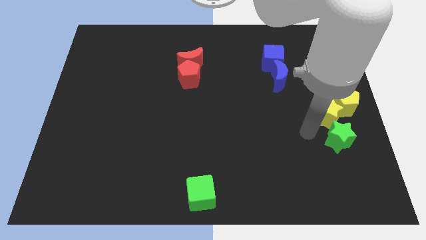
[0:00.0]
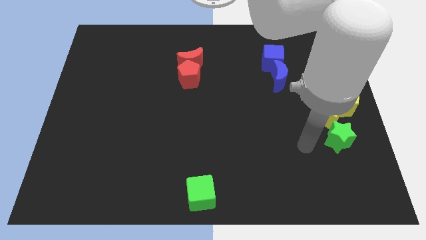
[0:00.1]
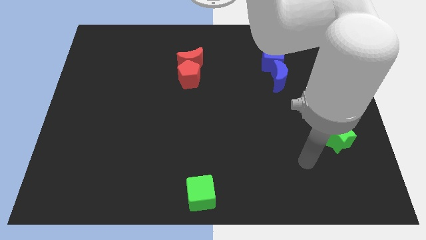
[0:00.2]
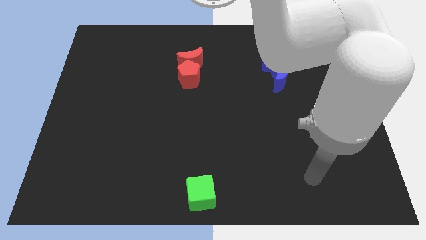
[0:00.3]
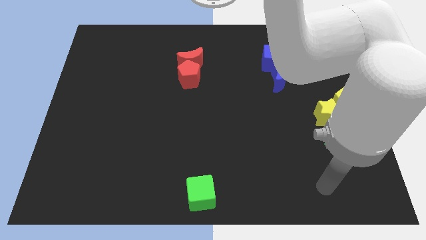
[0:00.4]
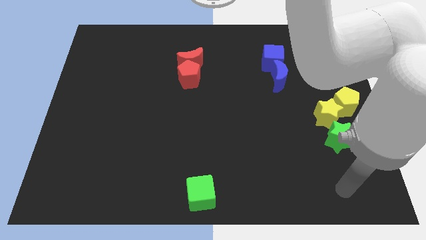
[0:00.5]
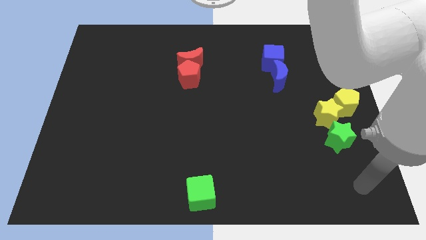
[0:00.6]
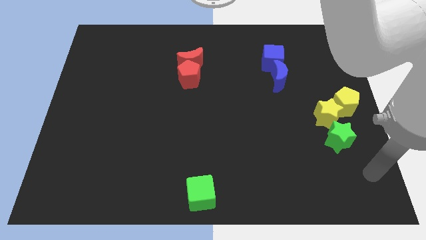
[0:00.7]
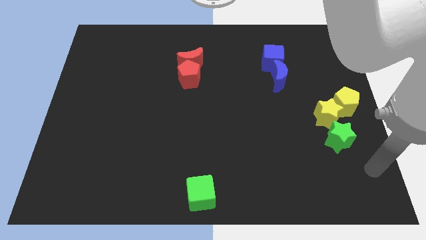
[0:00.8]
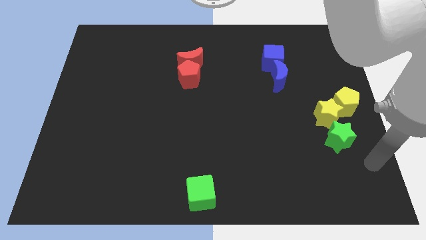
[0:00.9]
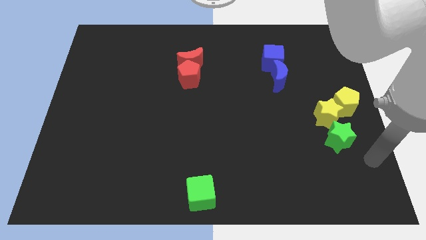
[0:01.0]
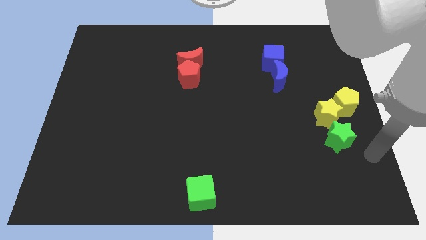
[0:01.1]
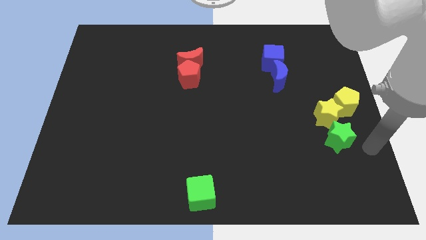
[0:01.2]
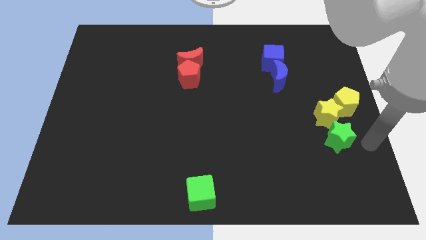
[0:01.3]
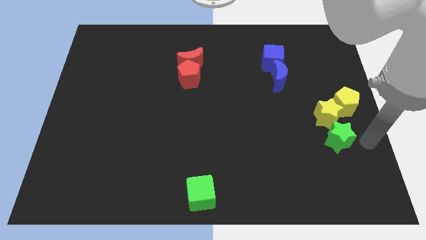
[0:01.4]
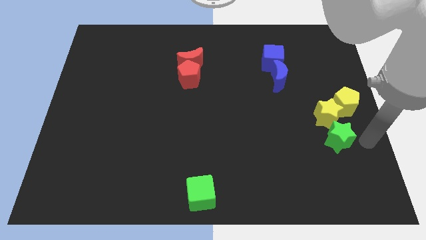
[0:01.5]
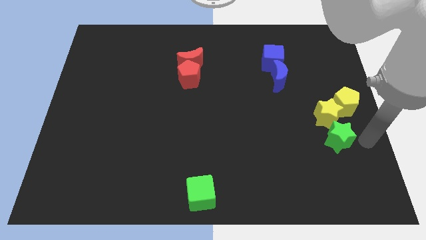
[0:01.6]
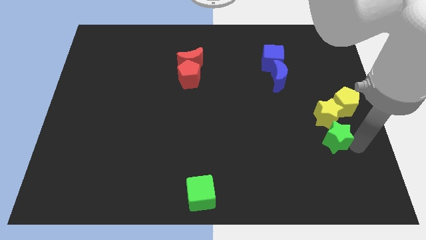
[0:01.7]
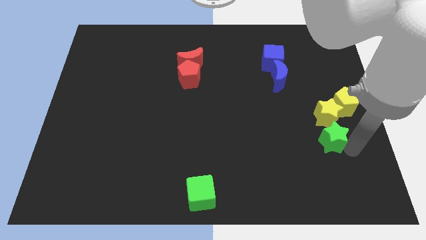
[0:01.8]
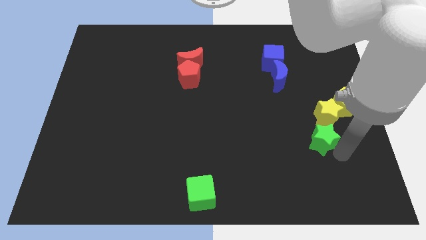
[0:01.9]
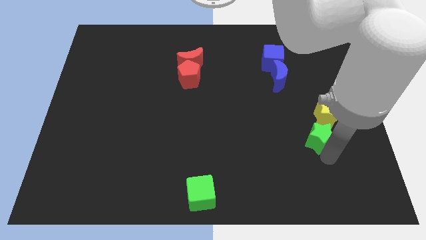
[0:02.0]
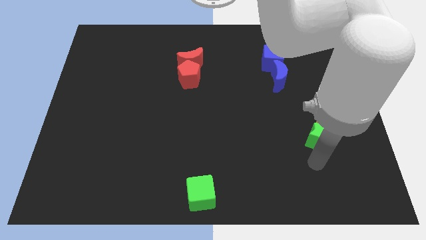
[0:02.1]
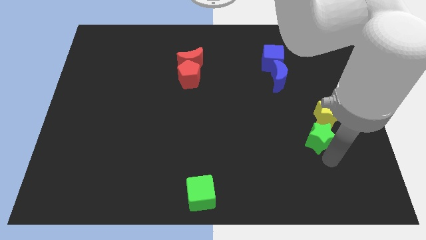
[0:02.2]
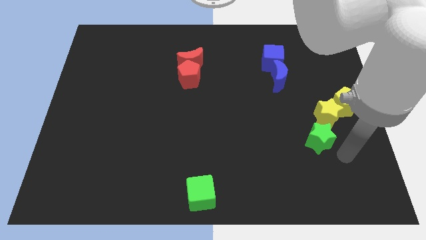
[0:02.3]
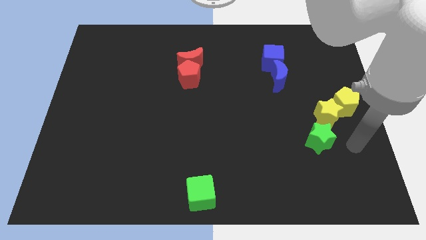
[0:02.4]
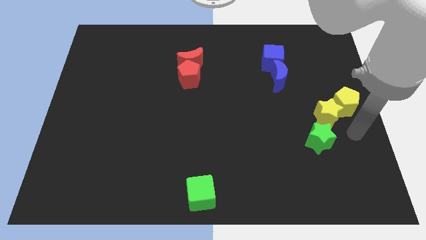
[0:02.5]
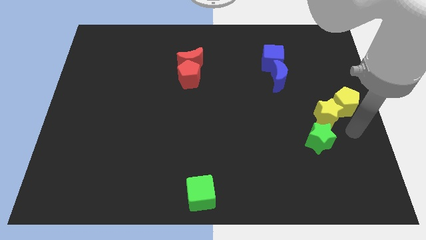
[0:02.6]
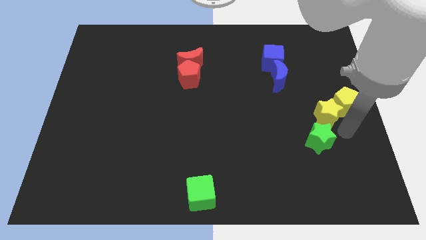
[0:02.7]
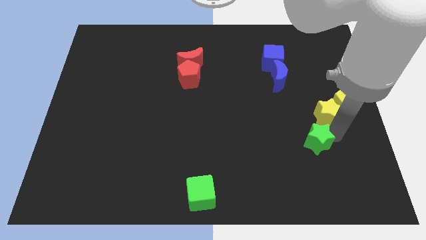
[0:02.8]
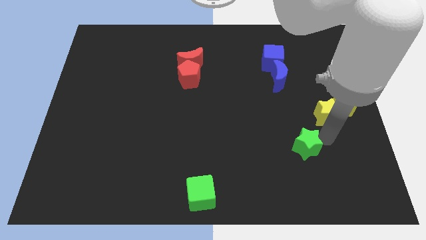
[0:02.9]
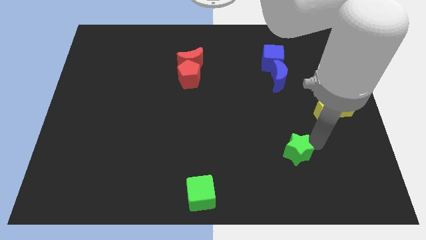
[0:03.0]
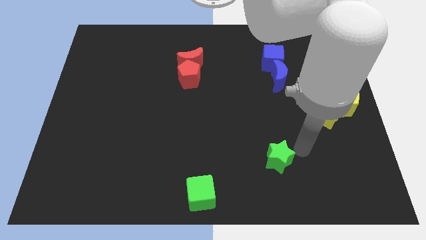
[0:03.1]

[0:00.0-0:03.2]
separate green star from the yellow star

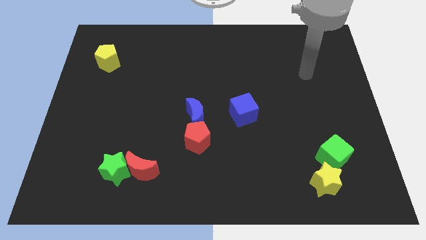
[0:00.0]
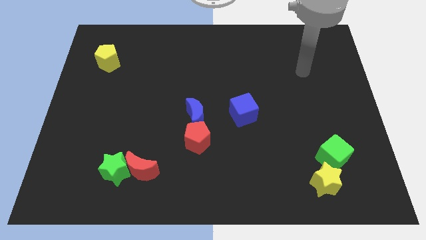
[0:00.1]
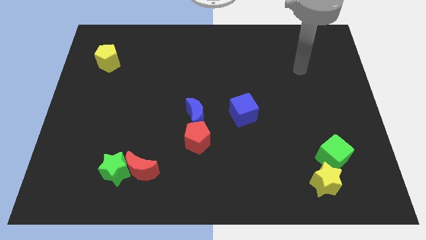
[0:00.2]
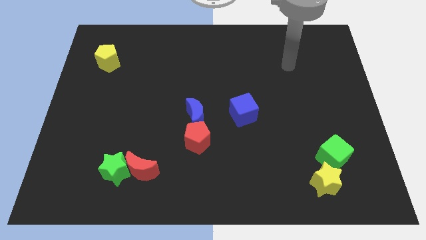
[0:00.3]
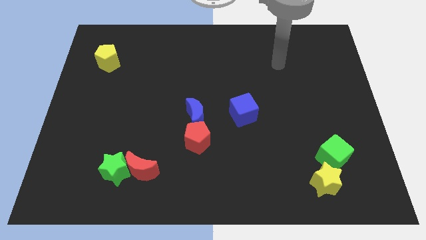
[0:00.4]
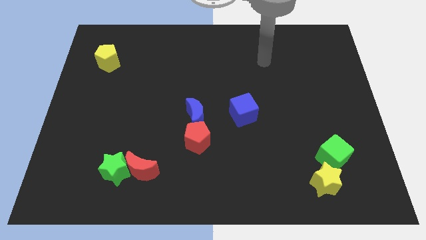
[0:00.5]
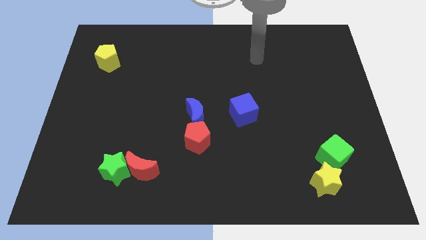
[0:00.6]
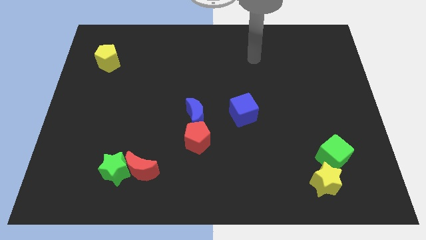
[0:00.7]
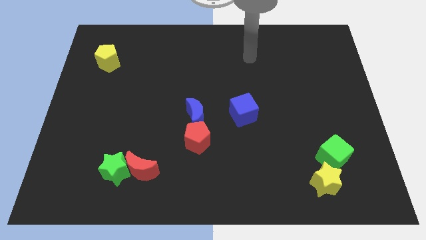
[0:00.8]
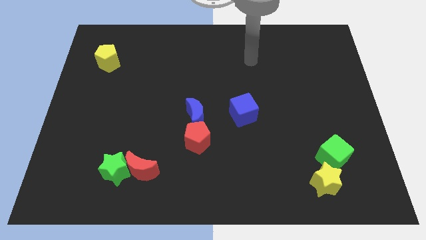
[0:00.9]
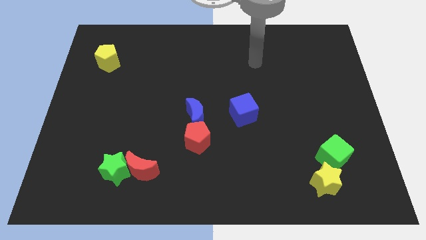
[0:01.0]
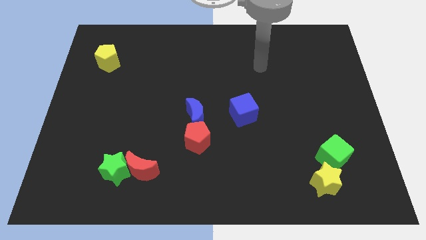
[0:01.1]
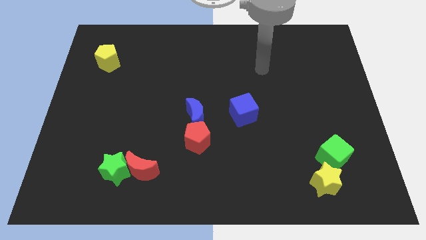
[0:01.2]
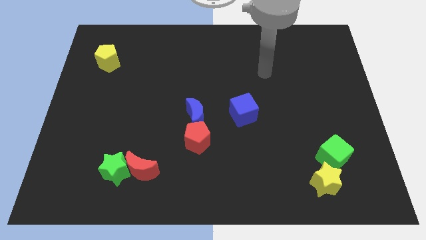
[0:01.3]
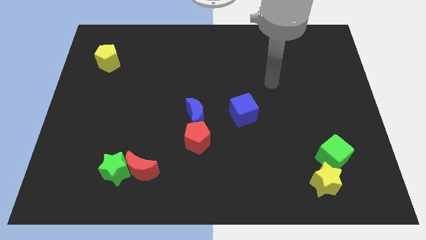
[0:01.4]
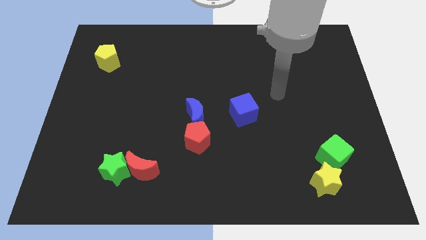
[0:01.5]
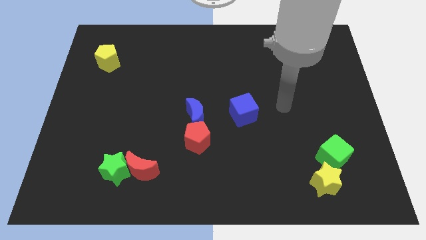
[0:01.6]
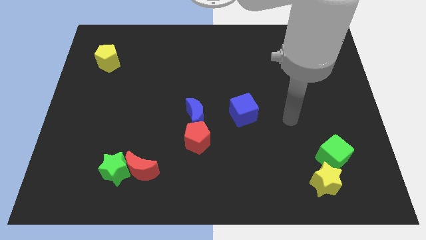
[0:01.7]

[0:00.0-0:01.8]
point your arm at the right side of the blue cube

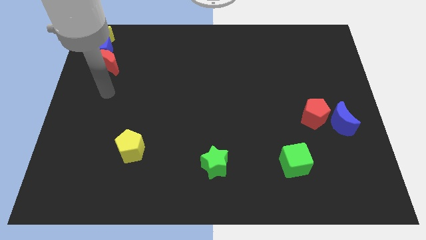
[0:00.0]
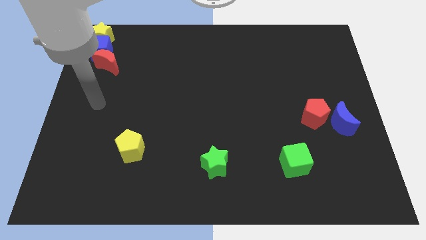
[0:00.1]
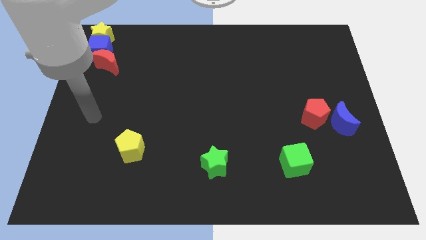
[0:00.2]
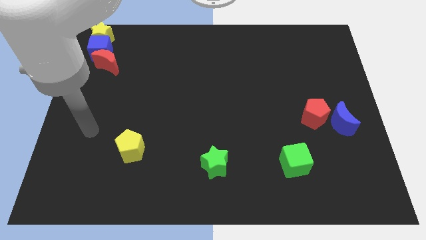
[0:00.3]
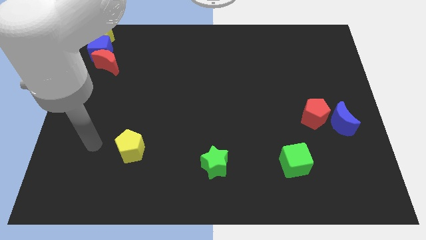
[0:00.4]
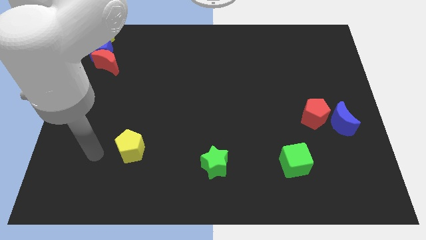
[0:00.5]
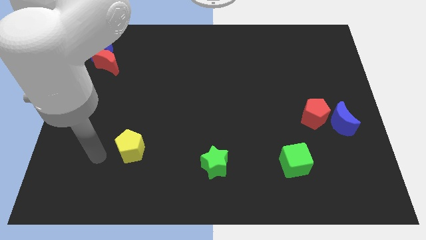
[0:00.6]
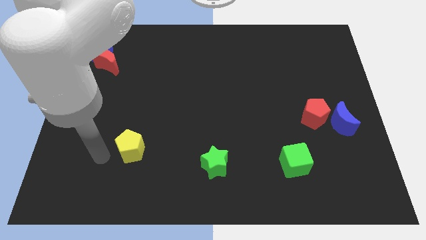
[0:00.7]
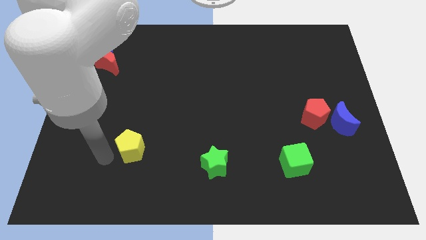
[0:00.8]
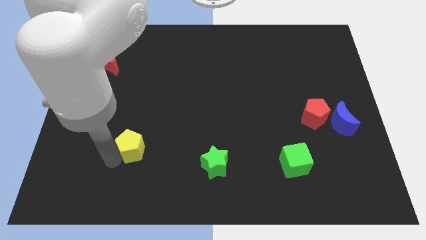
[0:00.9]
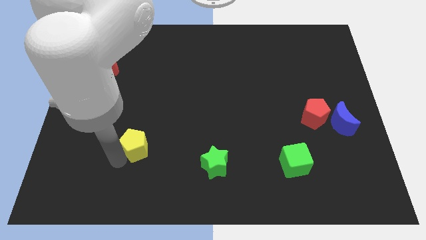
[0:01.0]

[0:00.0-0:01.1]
tap the left side of the yellow pentagon

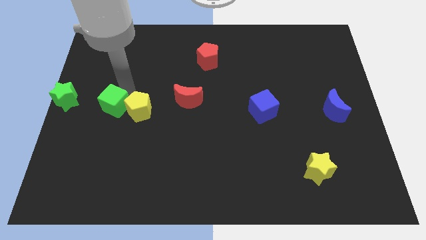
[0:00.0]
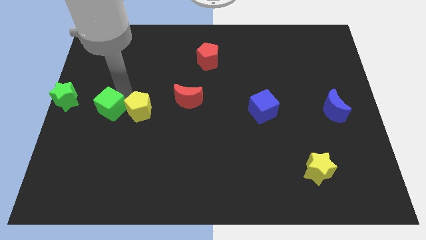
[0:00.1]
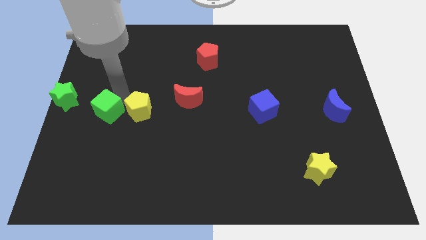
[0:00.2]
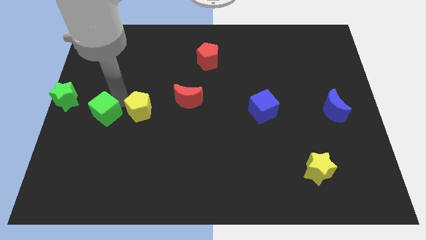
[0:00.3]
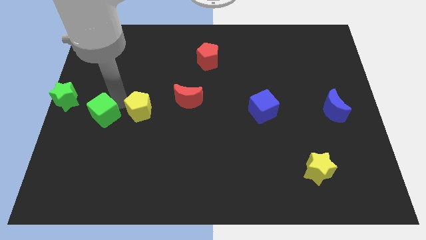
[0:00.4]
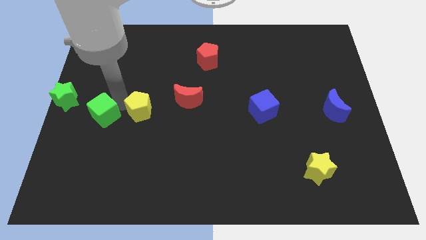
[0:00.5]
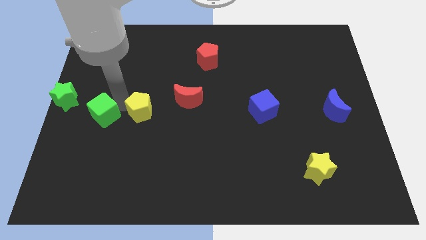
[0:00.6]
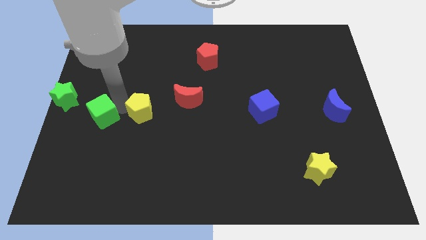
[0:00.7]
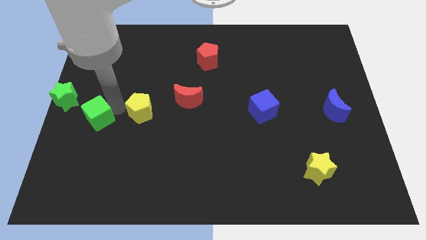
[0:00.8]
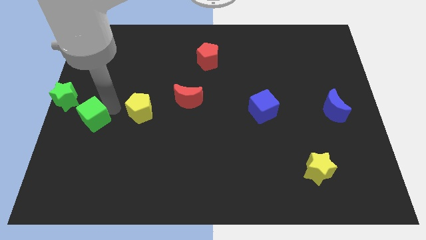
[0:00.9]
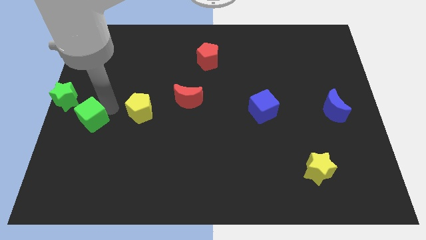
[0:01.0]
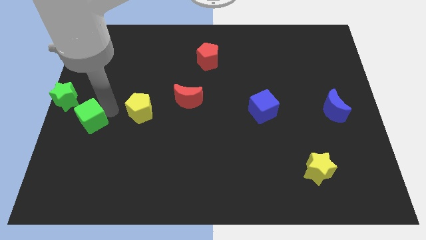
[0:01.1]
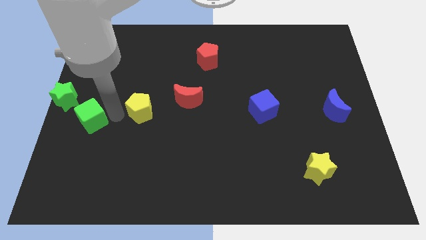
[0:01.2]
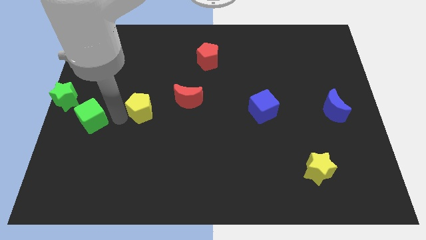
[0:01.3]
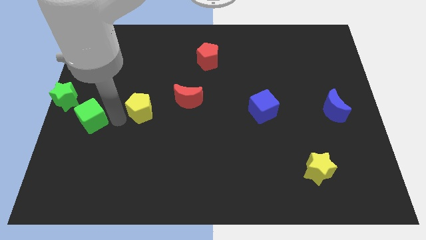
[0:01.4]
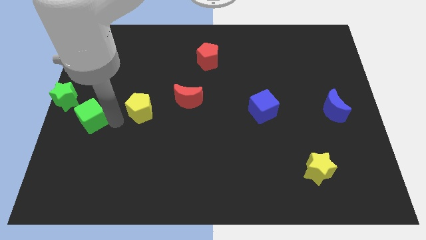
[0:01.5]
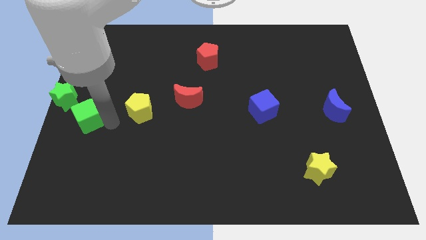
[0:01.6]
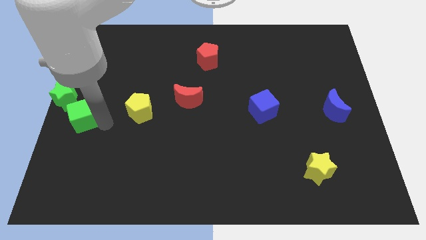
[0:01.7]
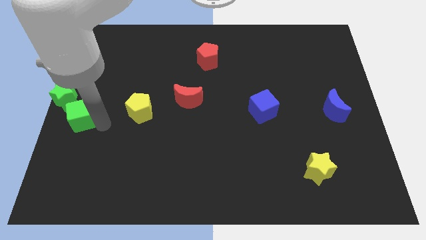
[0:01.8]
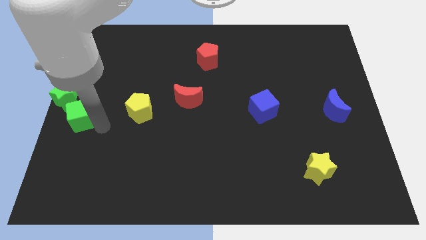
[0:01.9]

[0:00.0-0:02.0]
separate the green cube and yellow pentagon

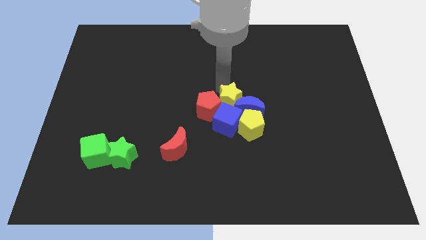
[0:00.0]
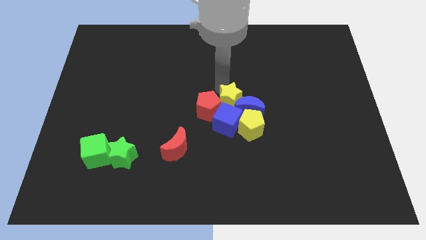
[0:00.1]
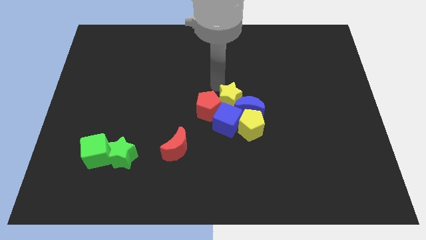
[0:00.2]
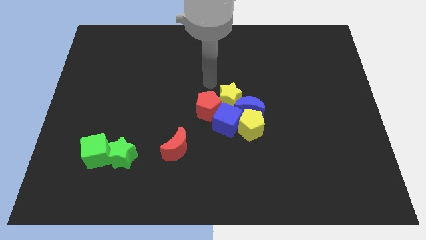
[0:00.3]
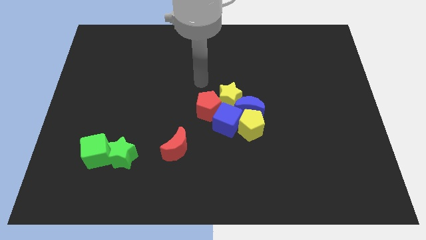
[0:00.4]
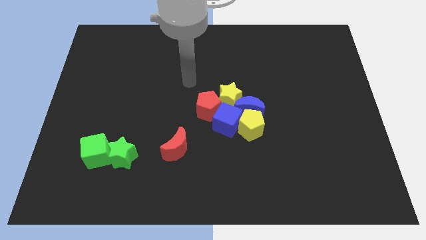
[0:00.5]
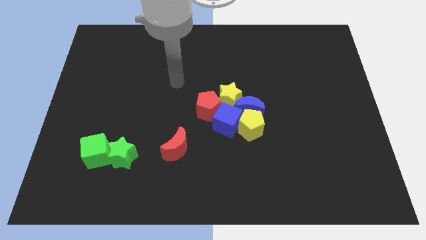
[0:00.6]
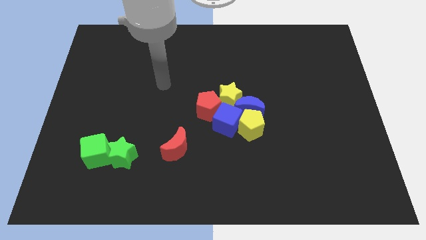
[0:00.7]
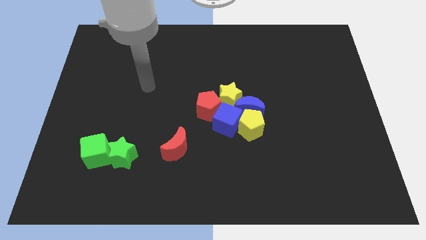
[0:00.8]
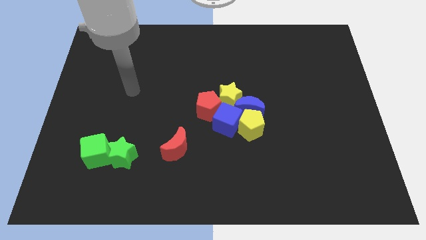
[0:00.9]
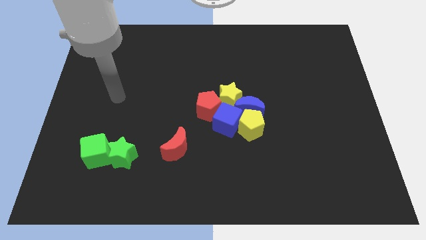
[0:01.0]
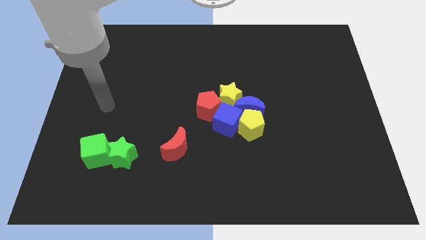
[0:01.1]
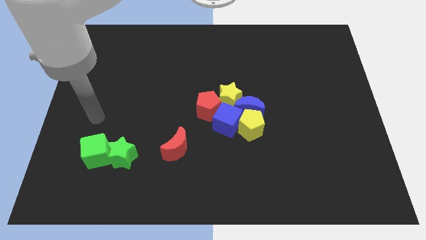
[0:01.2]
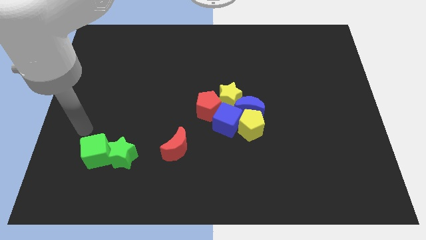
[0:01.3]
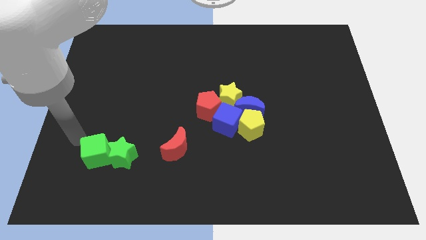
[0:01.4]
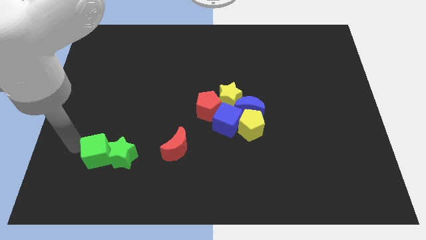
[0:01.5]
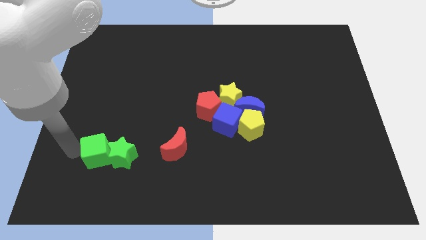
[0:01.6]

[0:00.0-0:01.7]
move away from the yellow star
